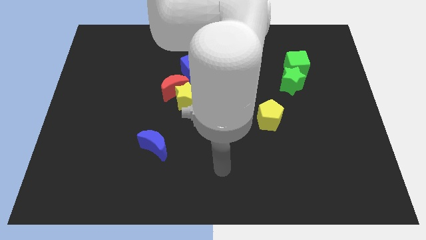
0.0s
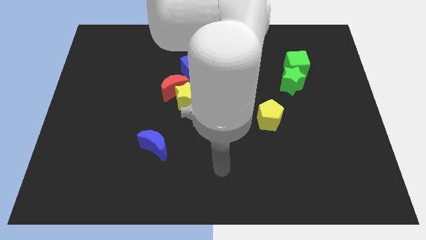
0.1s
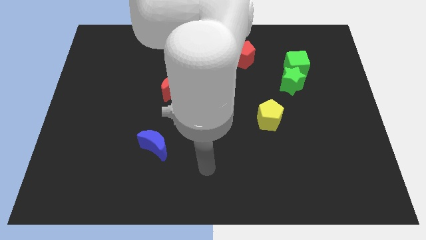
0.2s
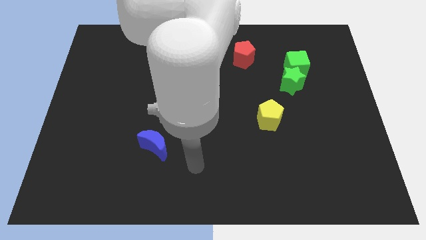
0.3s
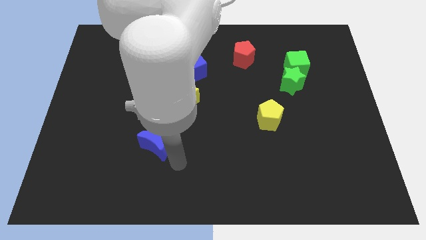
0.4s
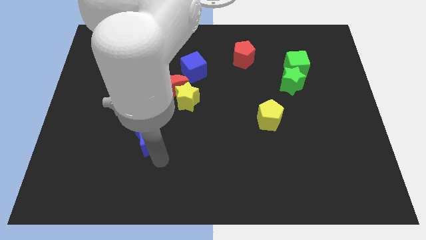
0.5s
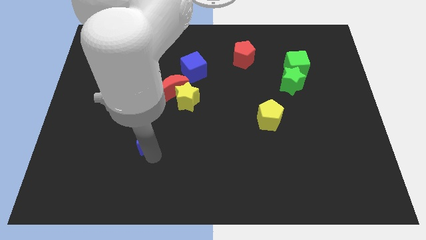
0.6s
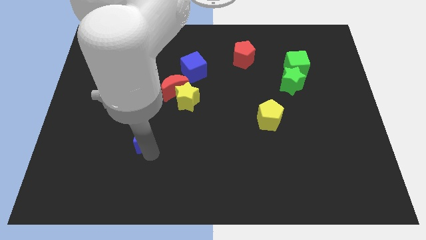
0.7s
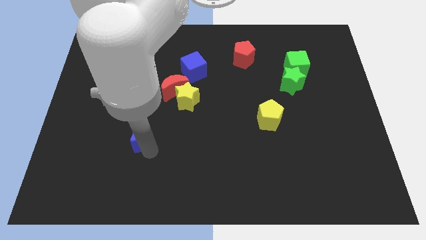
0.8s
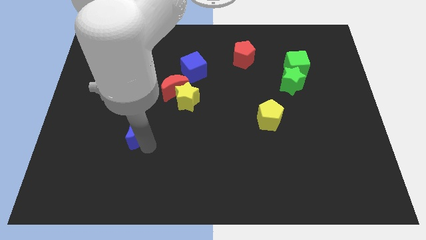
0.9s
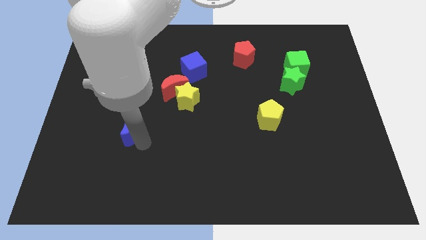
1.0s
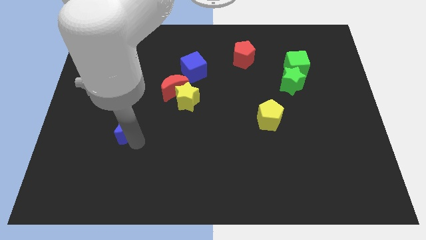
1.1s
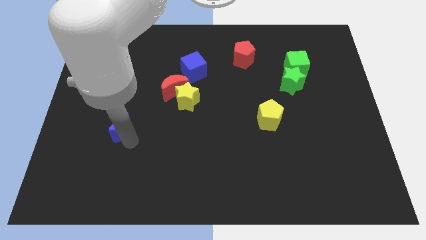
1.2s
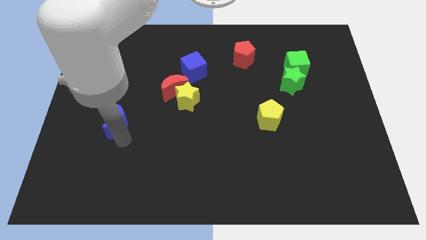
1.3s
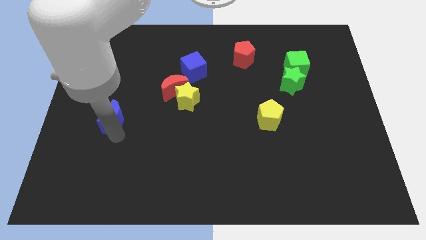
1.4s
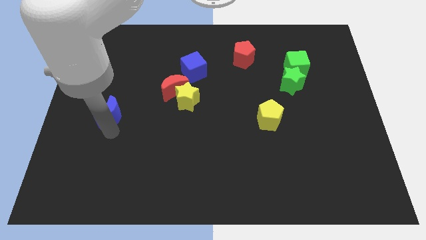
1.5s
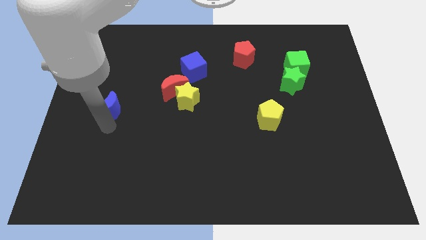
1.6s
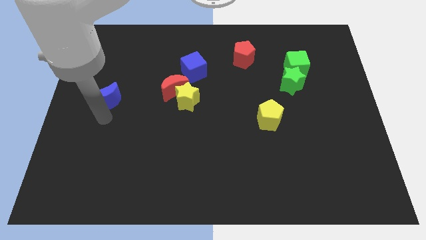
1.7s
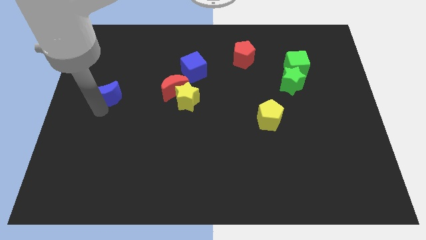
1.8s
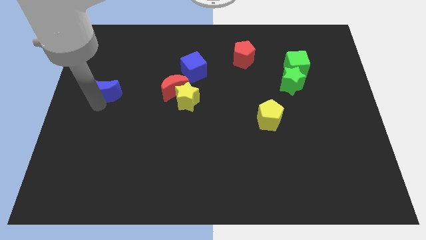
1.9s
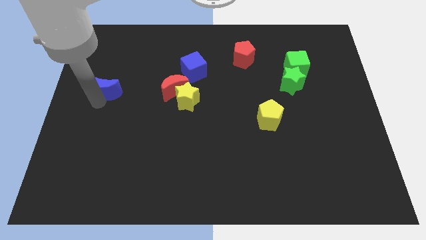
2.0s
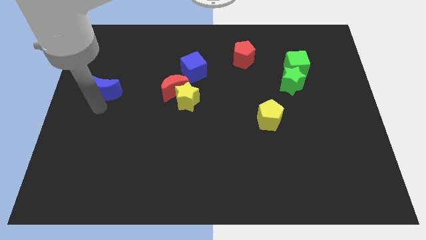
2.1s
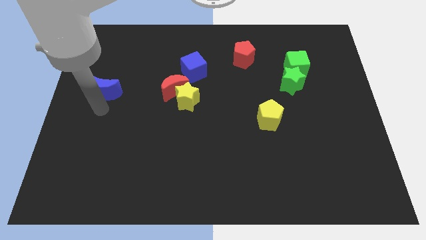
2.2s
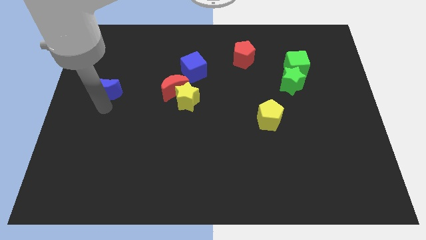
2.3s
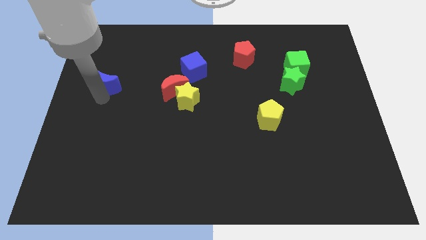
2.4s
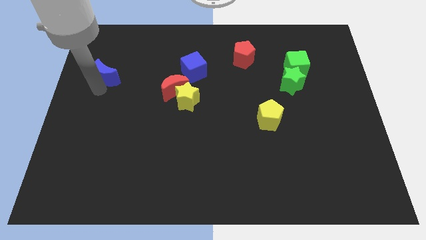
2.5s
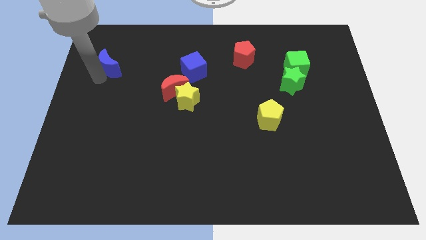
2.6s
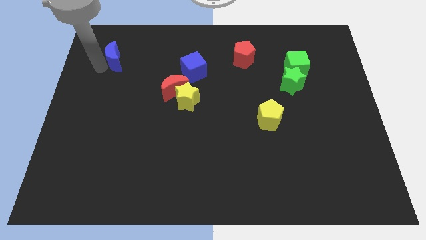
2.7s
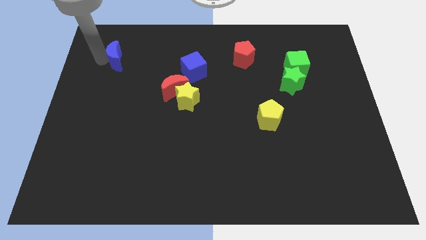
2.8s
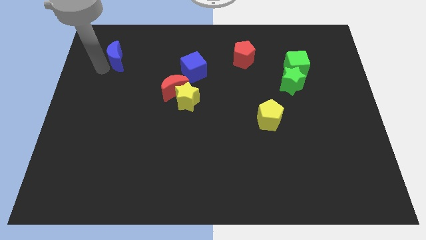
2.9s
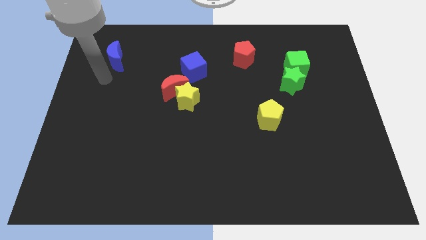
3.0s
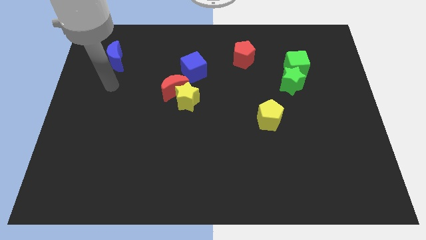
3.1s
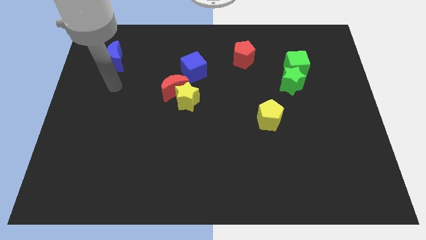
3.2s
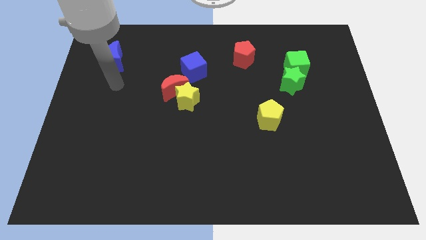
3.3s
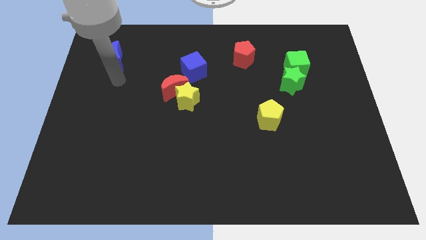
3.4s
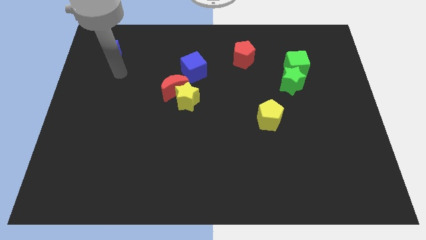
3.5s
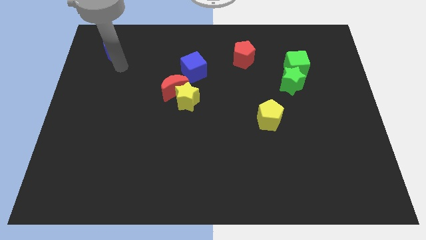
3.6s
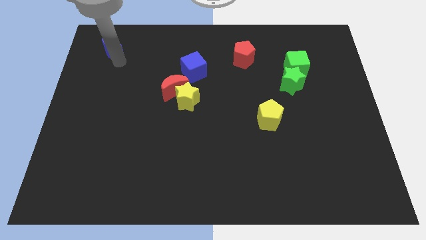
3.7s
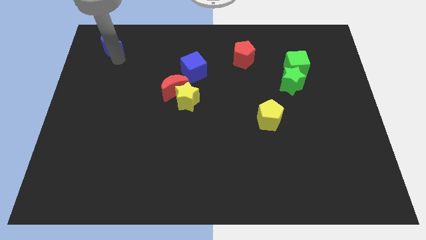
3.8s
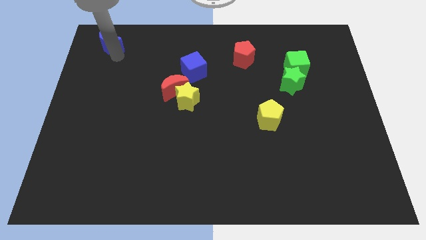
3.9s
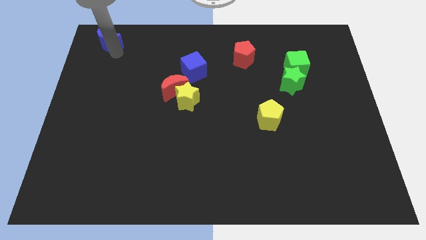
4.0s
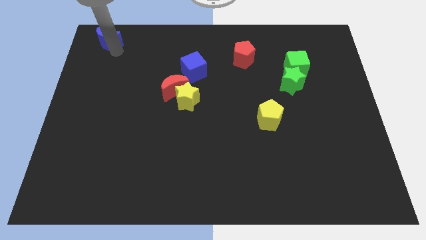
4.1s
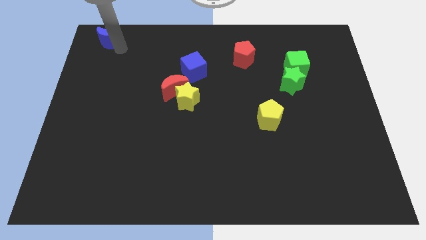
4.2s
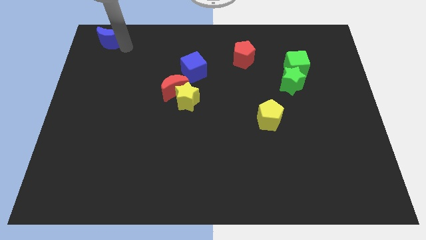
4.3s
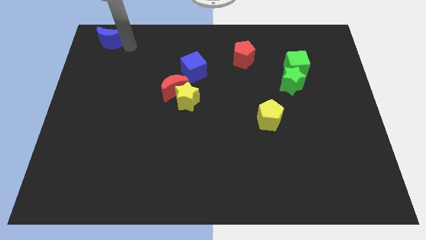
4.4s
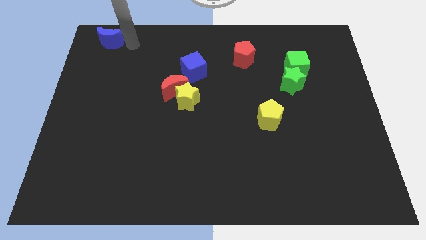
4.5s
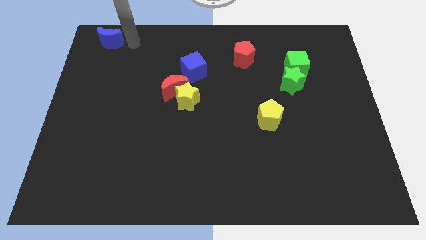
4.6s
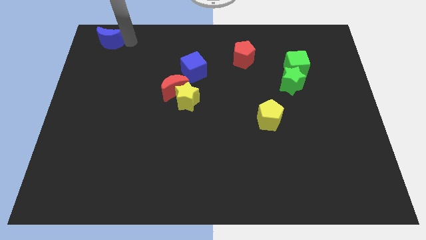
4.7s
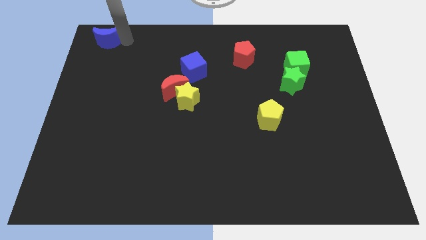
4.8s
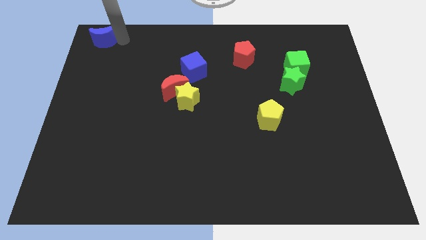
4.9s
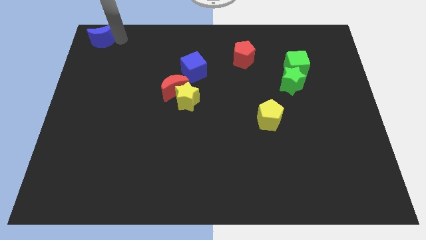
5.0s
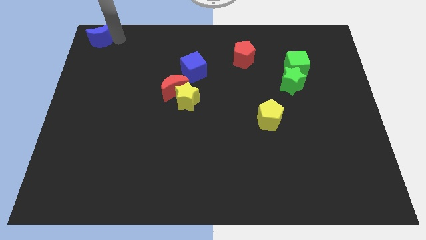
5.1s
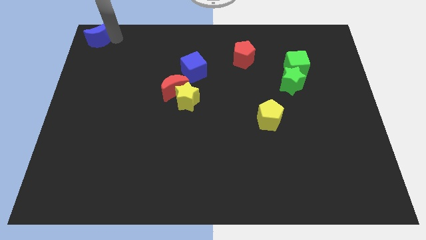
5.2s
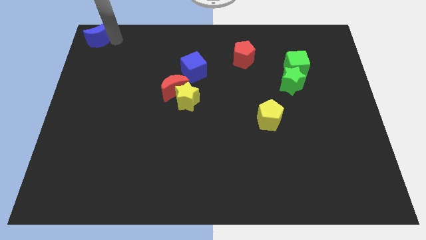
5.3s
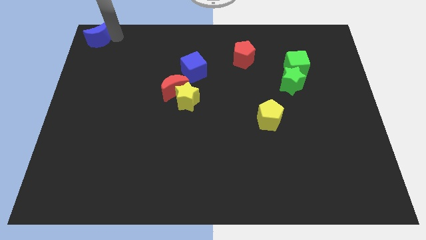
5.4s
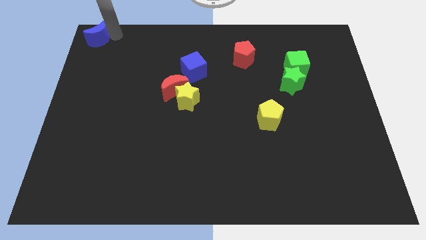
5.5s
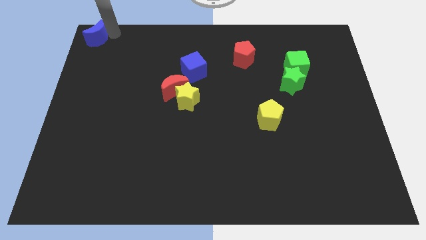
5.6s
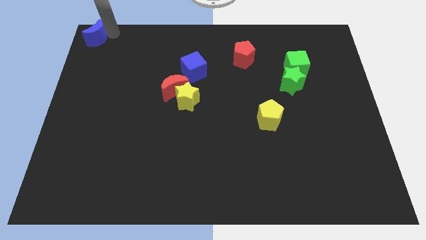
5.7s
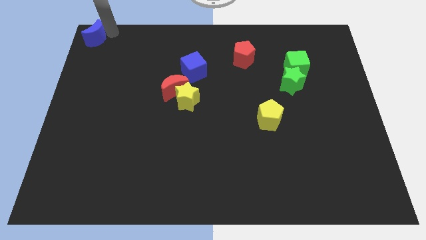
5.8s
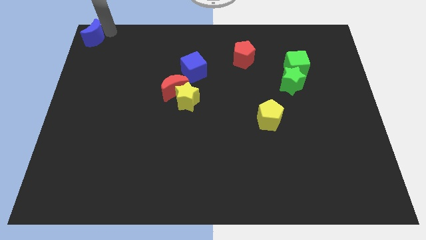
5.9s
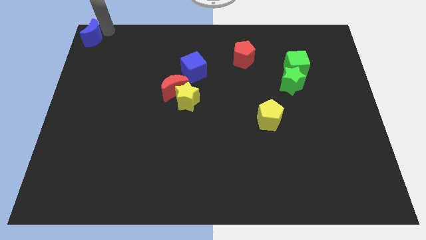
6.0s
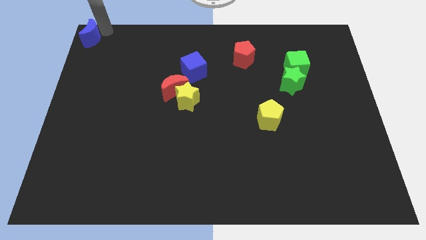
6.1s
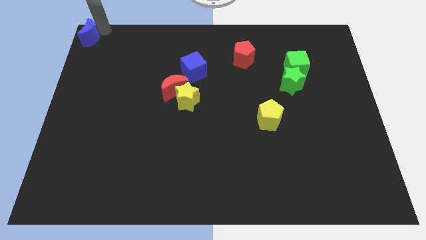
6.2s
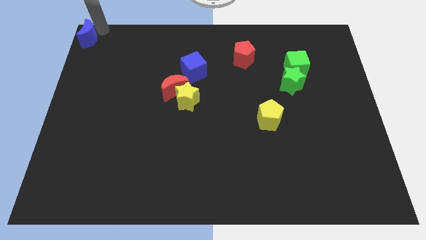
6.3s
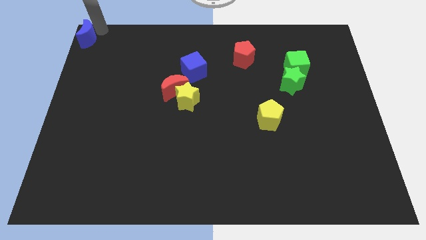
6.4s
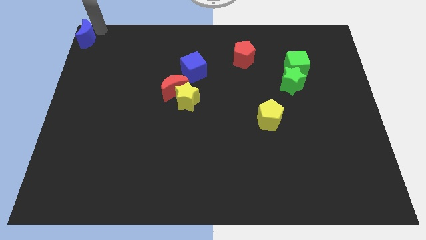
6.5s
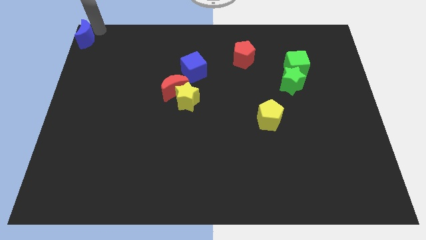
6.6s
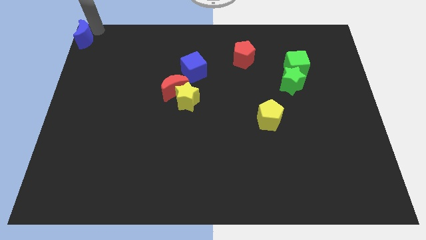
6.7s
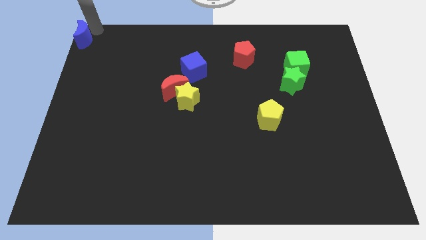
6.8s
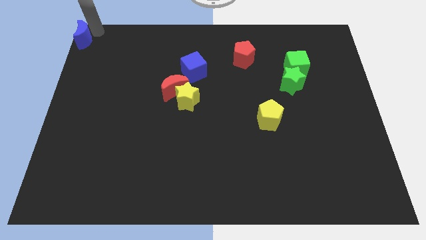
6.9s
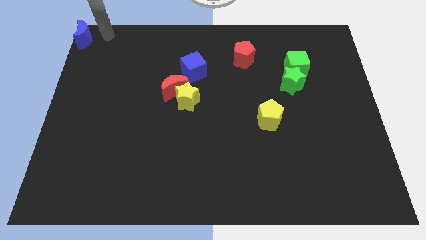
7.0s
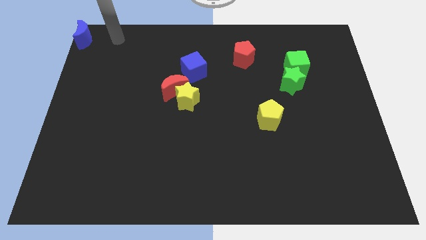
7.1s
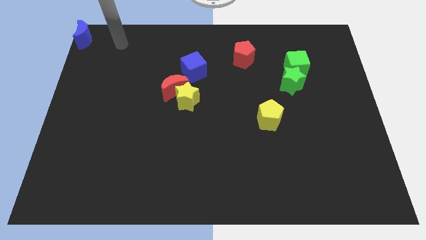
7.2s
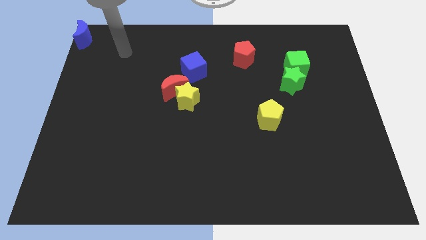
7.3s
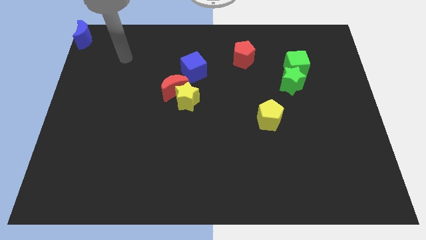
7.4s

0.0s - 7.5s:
push the blue crescent into the top left corner of the board

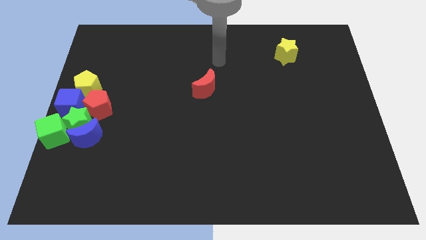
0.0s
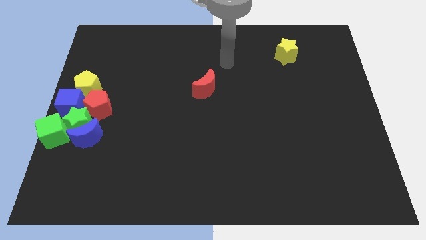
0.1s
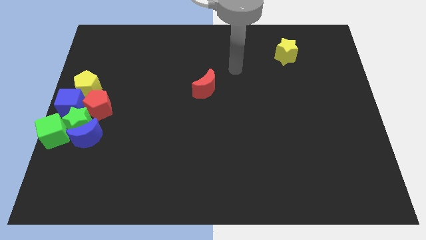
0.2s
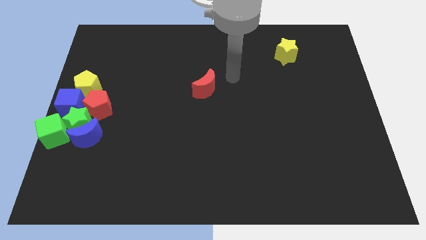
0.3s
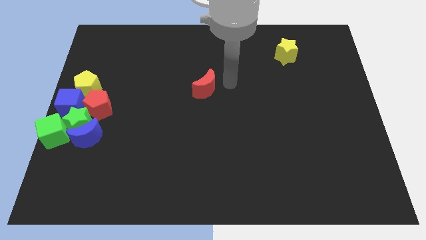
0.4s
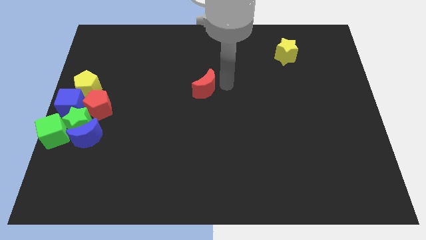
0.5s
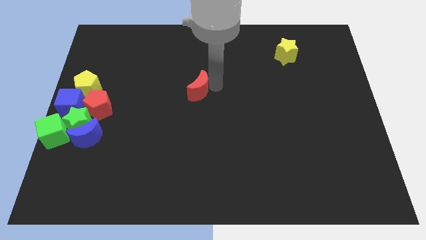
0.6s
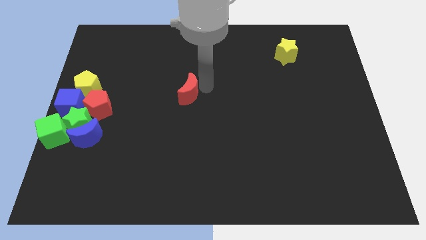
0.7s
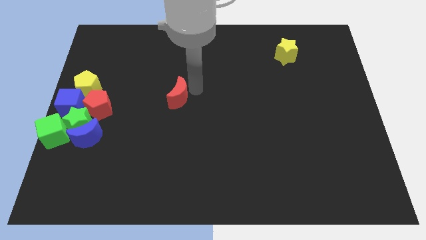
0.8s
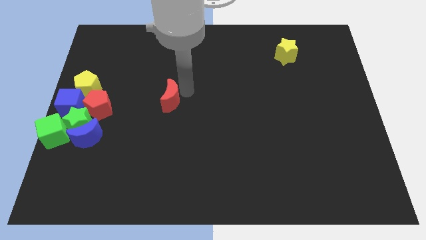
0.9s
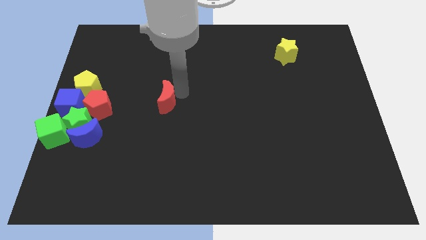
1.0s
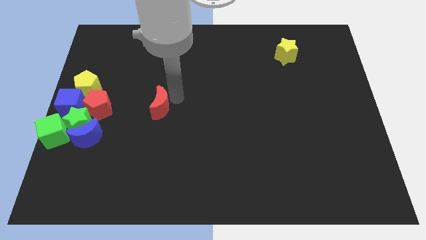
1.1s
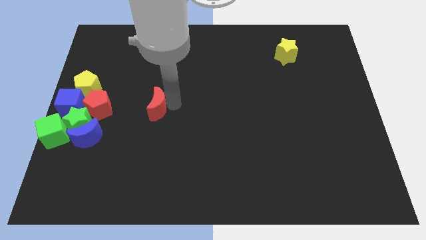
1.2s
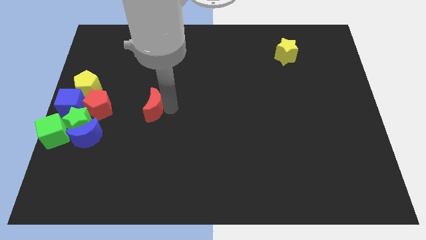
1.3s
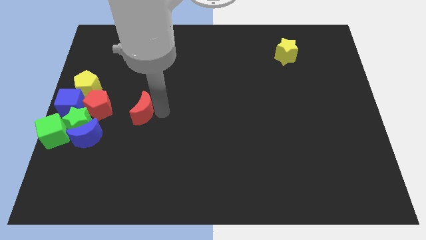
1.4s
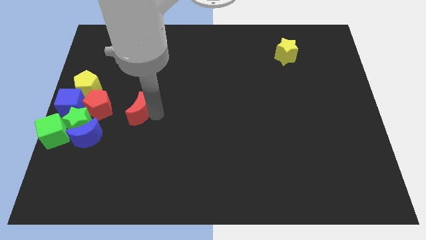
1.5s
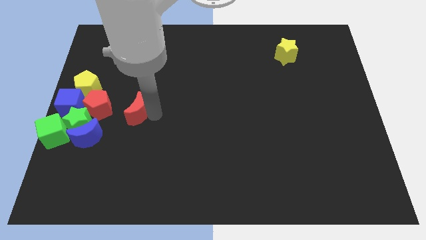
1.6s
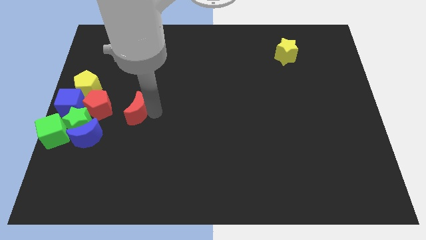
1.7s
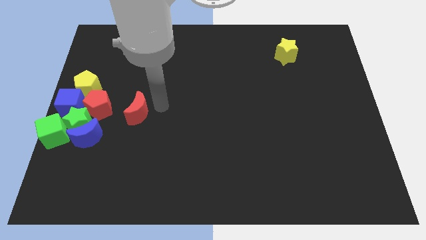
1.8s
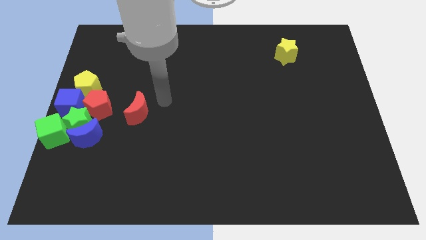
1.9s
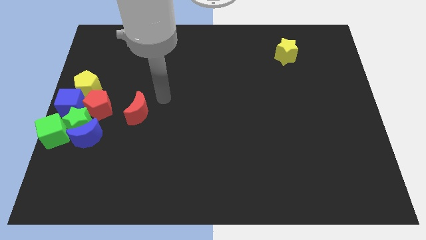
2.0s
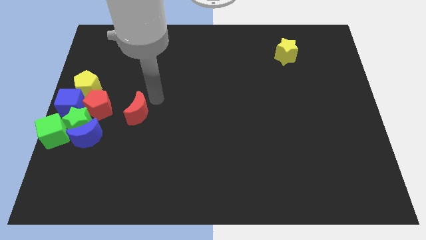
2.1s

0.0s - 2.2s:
move the red crescent towards the group of blocks
